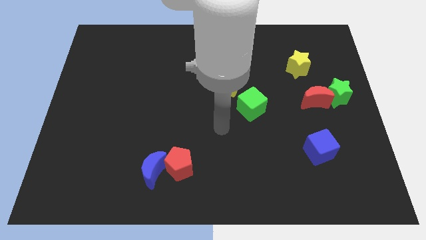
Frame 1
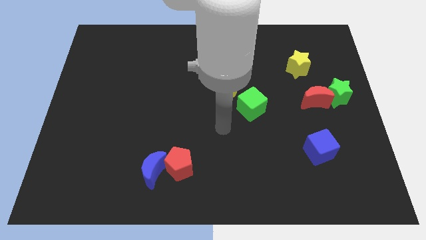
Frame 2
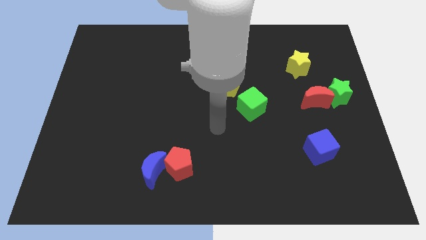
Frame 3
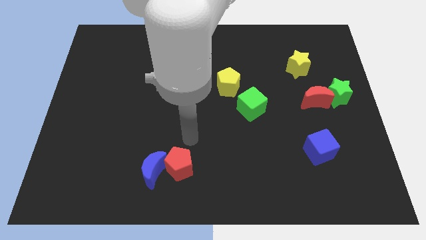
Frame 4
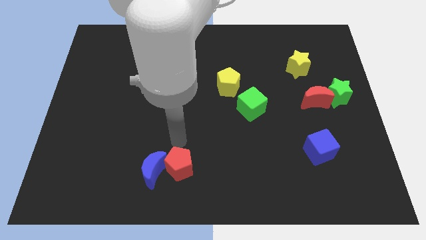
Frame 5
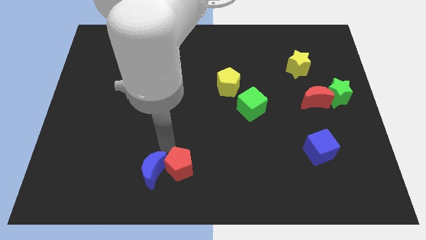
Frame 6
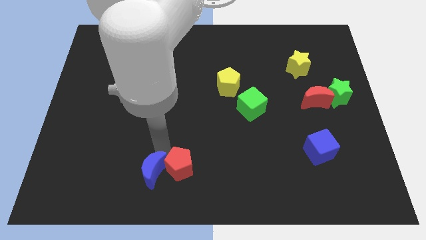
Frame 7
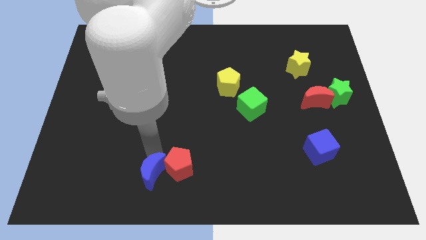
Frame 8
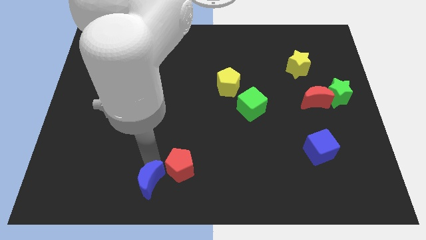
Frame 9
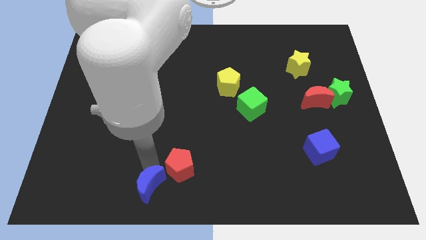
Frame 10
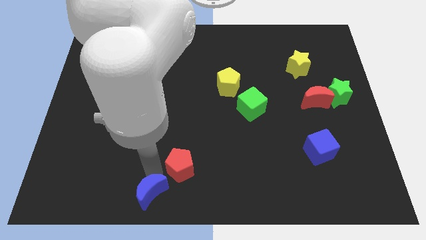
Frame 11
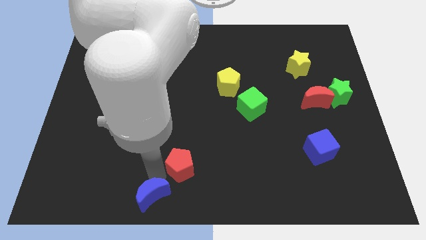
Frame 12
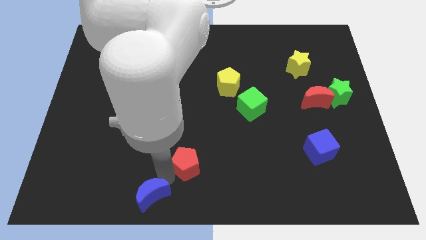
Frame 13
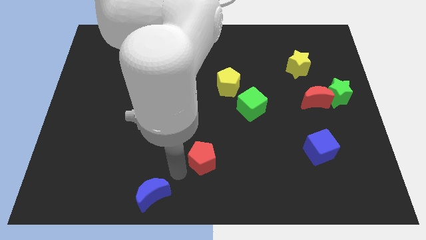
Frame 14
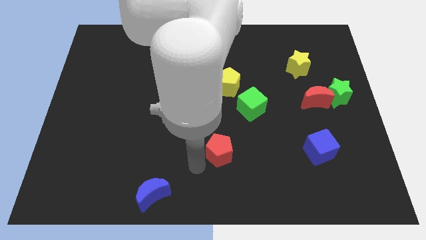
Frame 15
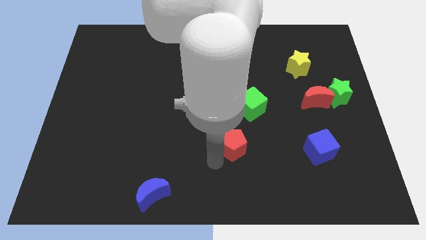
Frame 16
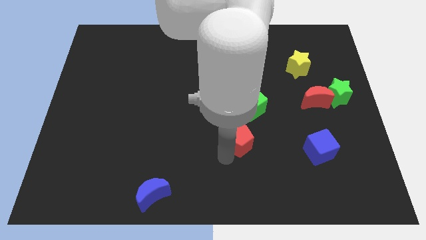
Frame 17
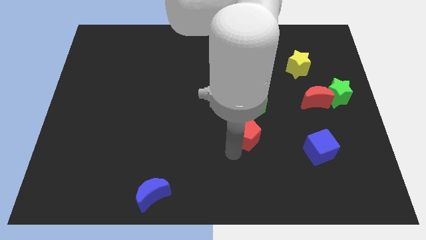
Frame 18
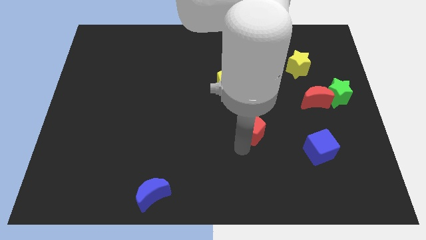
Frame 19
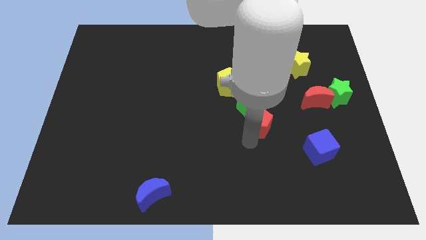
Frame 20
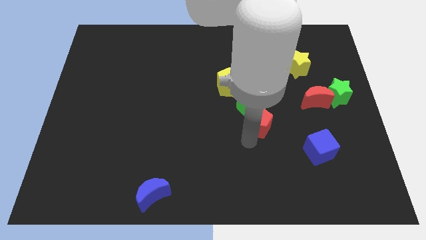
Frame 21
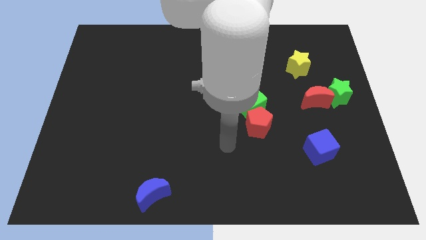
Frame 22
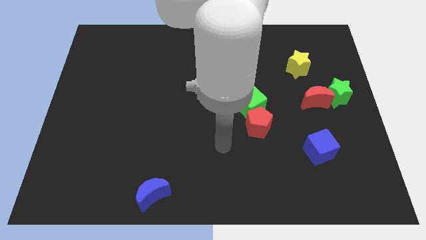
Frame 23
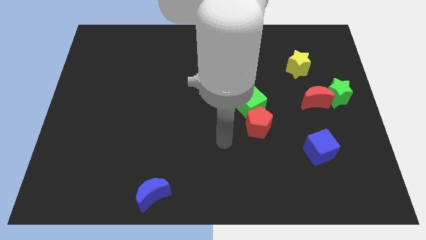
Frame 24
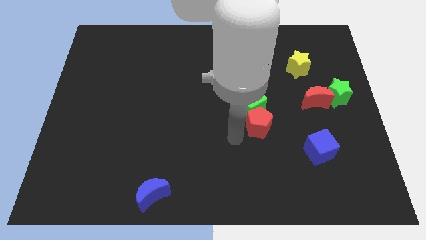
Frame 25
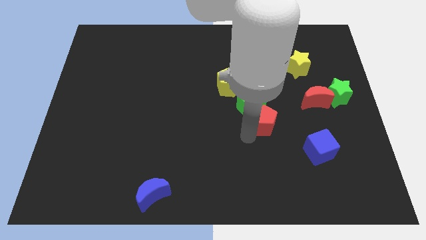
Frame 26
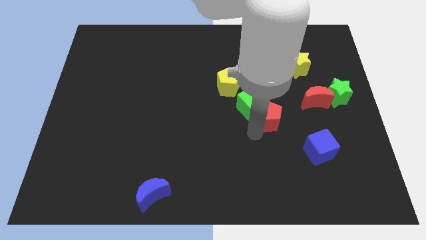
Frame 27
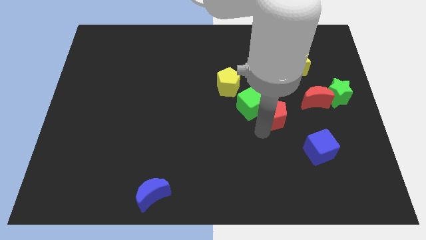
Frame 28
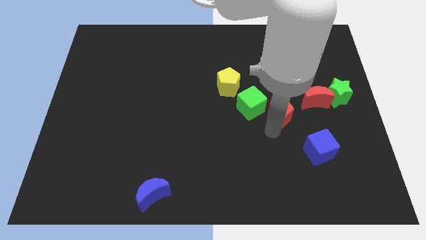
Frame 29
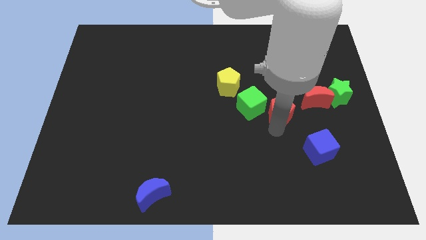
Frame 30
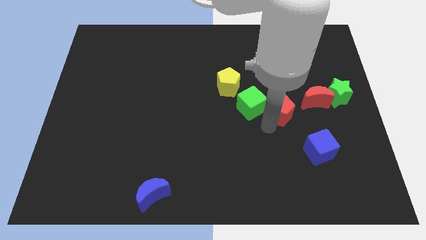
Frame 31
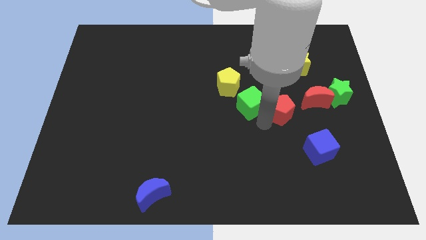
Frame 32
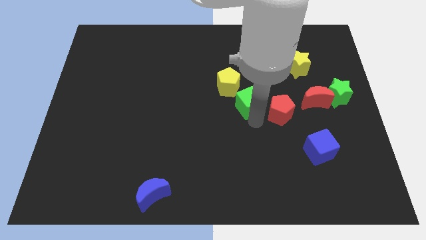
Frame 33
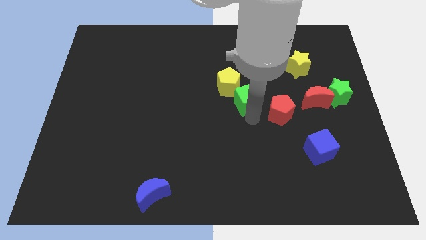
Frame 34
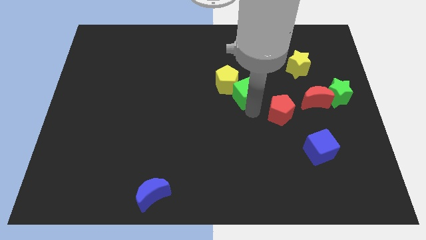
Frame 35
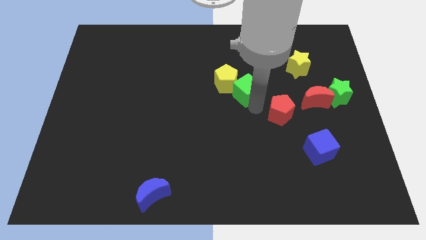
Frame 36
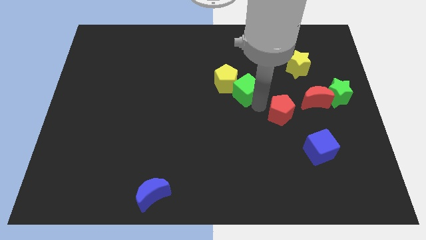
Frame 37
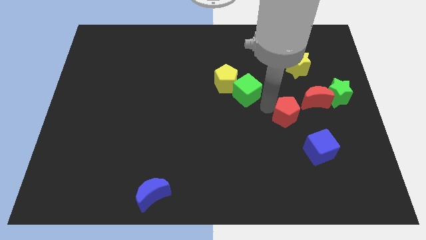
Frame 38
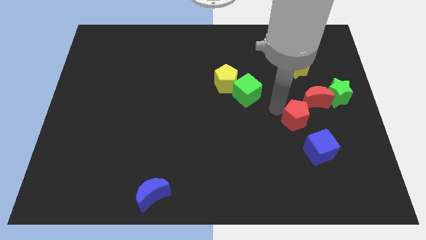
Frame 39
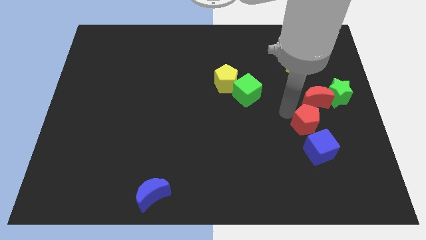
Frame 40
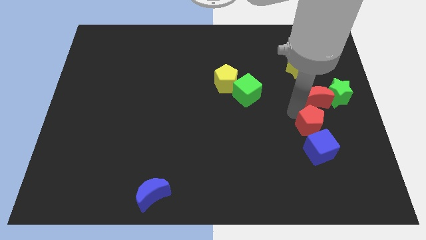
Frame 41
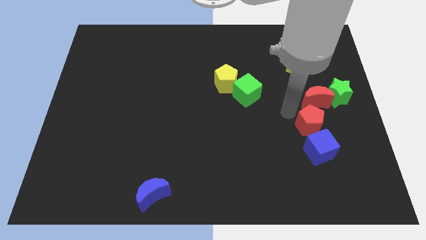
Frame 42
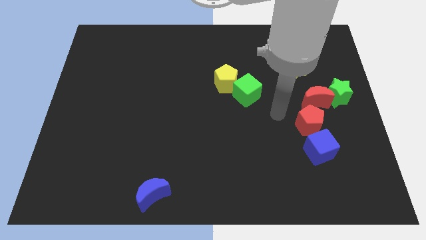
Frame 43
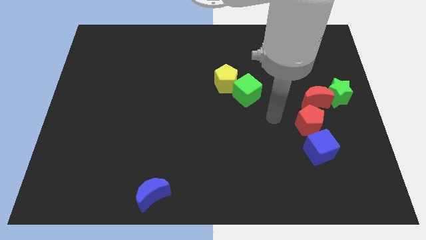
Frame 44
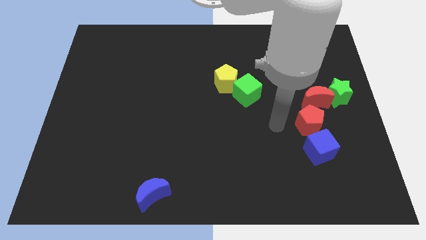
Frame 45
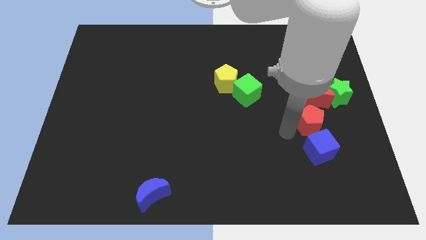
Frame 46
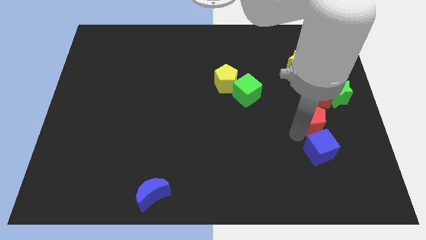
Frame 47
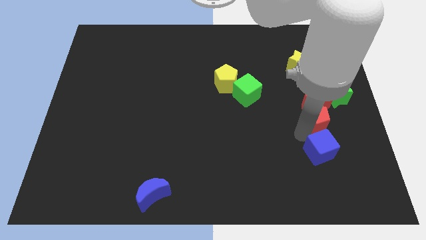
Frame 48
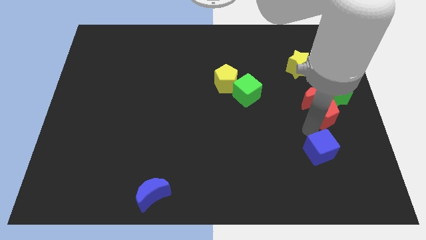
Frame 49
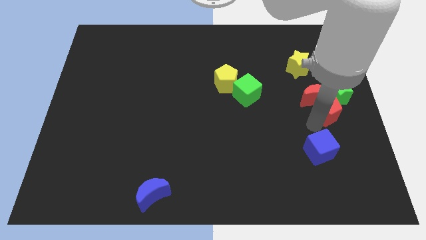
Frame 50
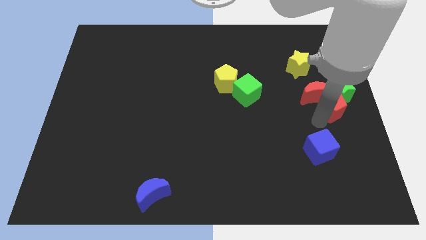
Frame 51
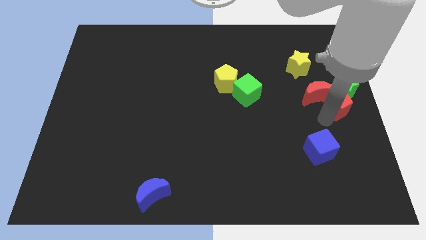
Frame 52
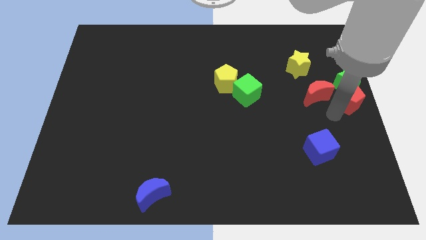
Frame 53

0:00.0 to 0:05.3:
put the red pentagon to the green star

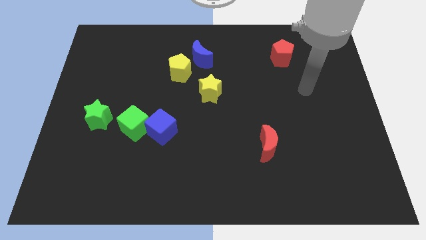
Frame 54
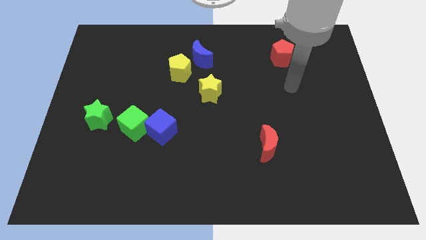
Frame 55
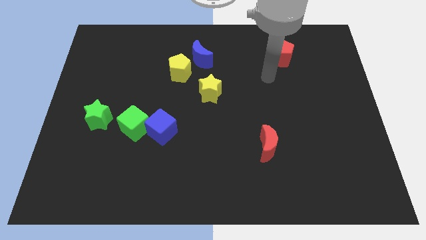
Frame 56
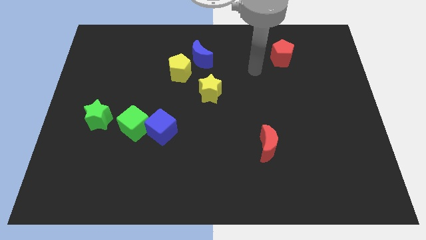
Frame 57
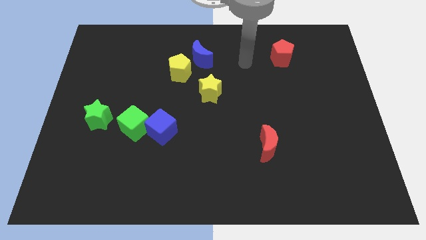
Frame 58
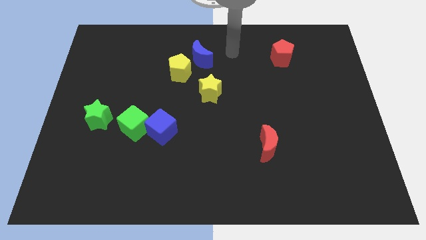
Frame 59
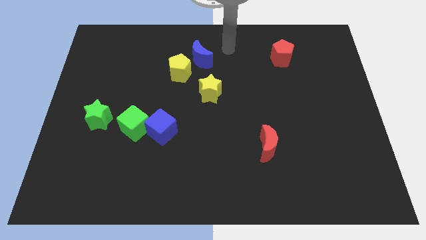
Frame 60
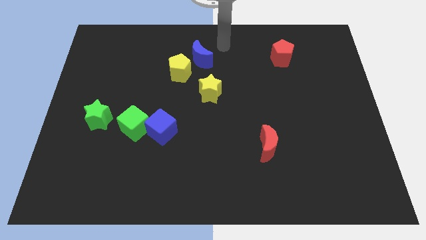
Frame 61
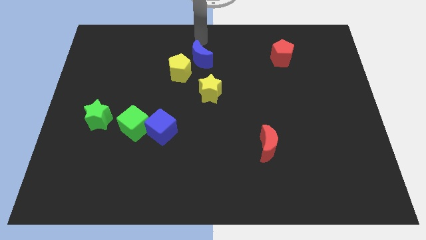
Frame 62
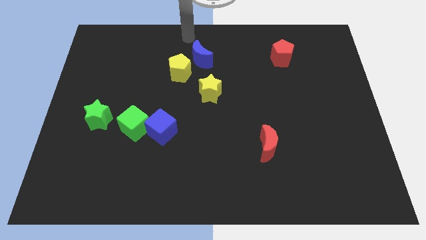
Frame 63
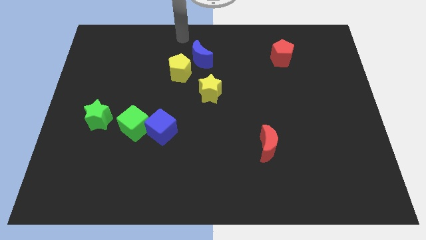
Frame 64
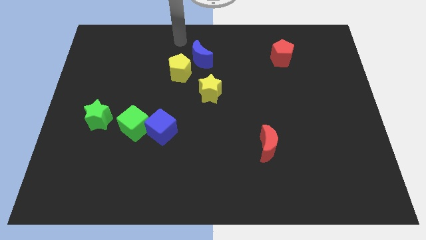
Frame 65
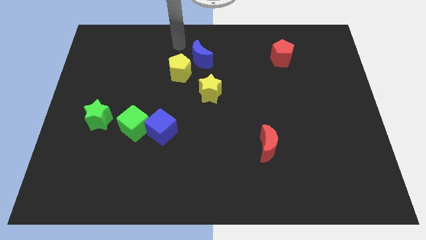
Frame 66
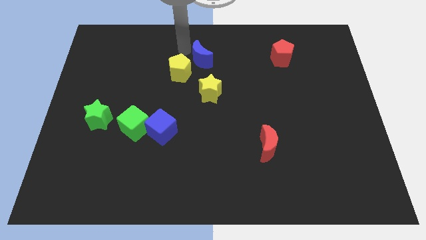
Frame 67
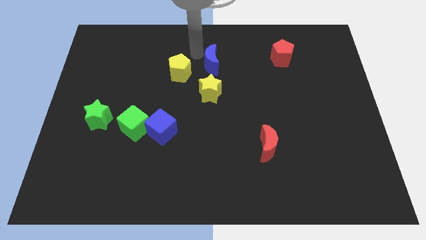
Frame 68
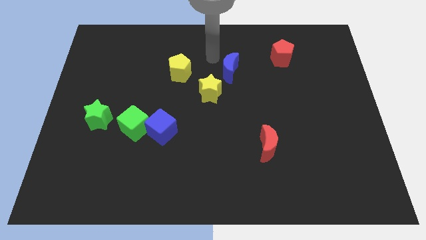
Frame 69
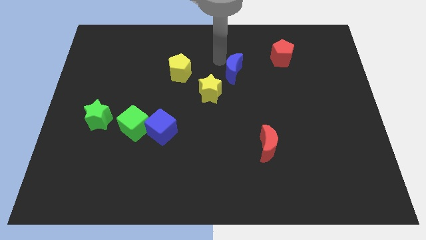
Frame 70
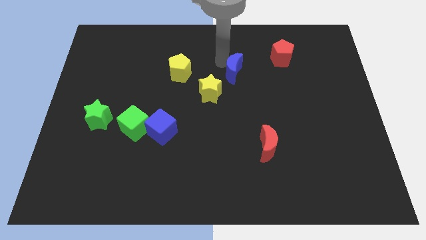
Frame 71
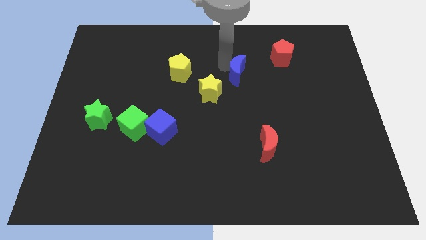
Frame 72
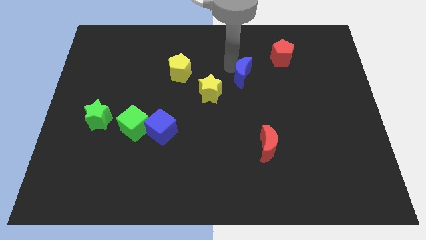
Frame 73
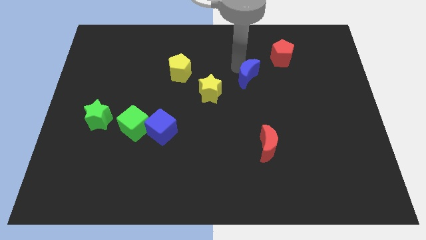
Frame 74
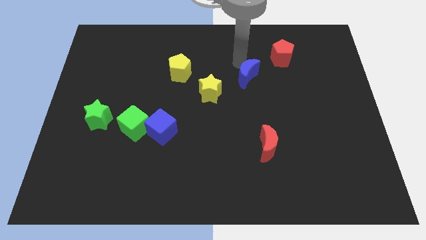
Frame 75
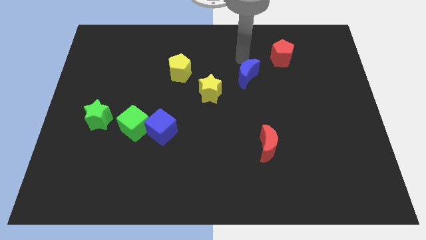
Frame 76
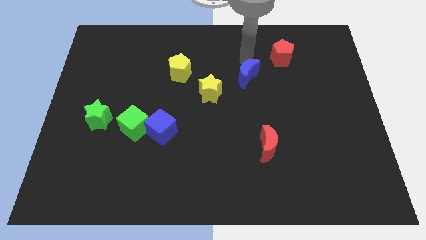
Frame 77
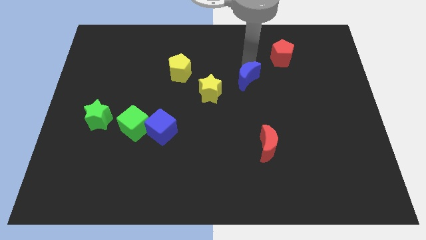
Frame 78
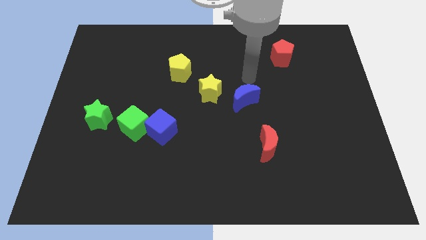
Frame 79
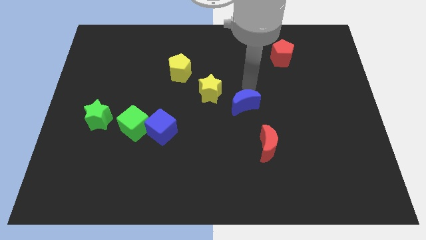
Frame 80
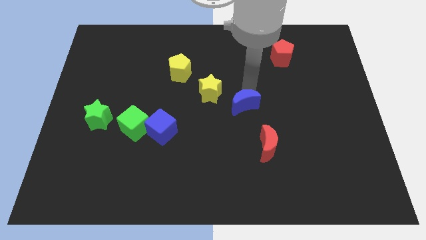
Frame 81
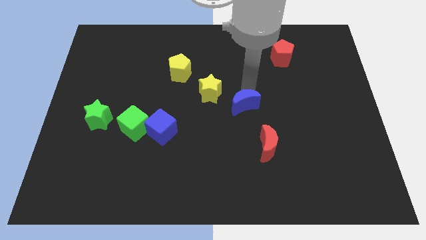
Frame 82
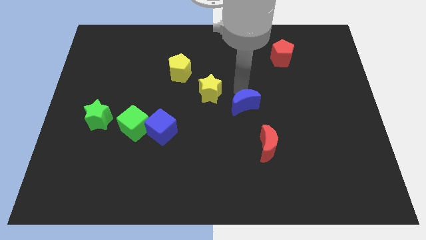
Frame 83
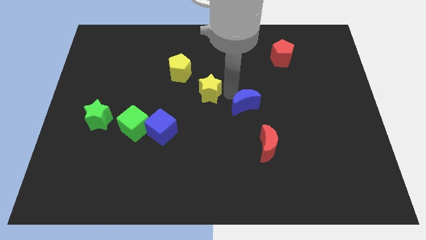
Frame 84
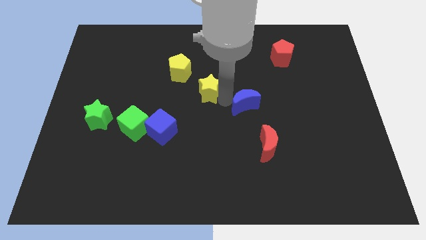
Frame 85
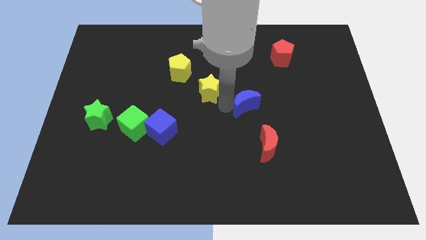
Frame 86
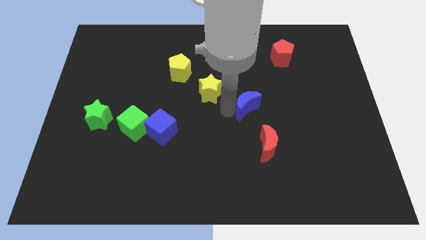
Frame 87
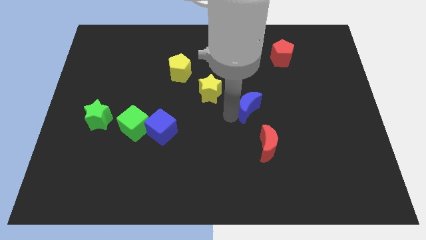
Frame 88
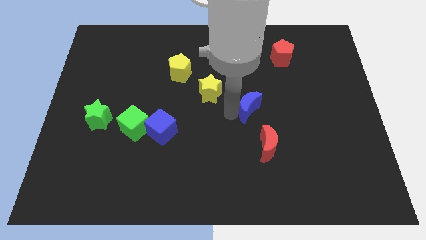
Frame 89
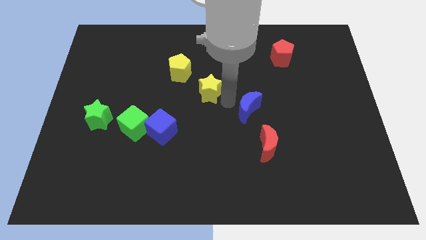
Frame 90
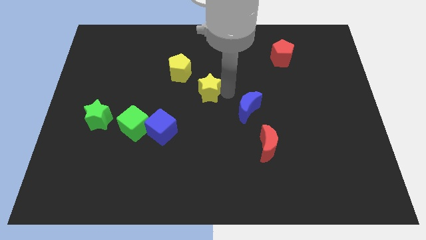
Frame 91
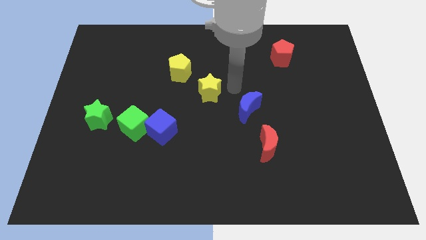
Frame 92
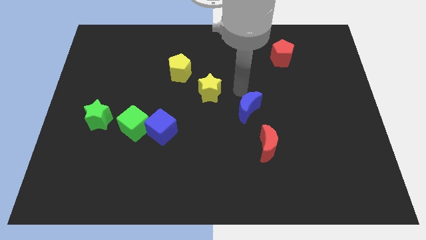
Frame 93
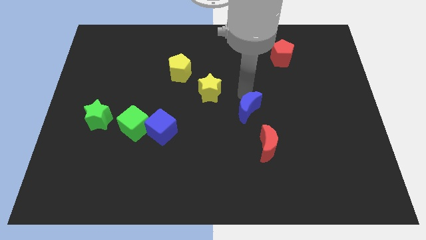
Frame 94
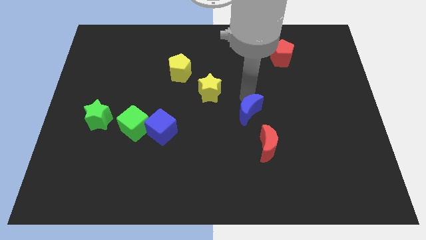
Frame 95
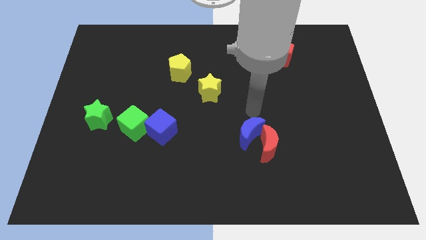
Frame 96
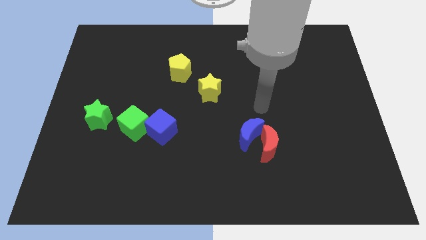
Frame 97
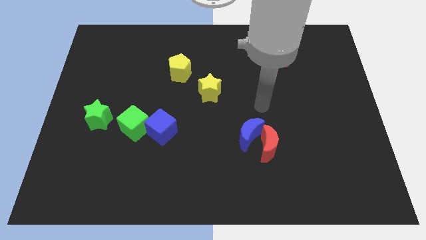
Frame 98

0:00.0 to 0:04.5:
slide the blue moon next to the red moon
